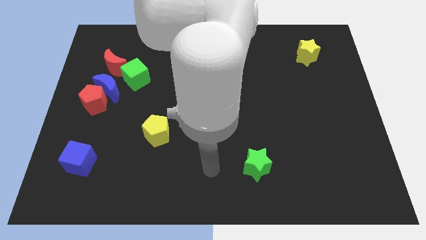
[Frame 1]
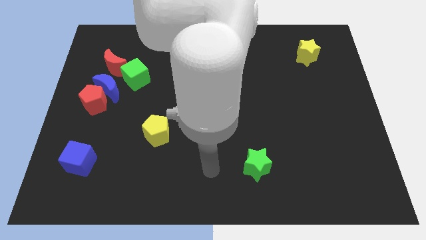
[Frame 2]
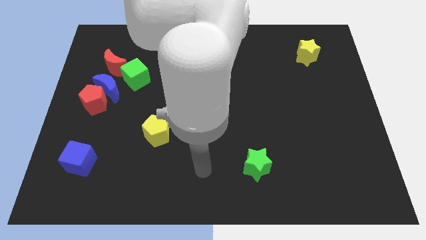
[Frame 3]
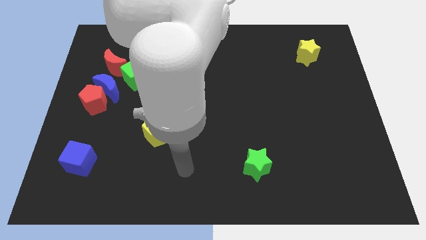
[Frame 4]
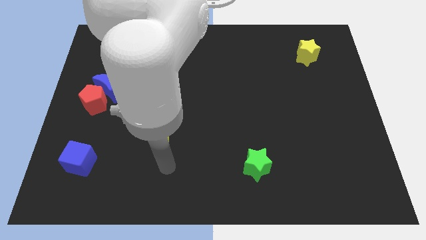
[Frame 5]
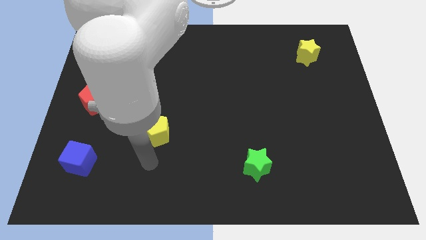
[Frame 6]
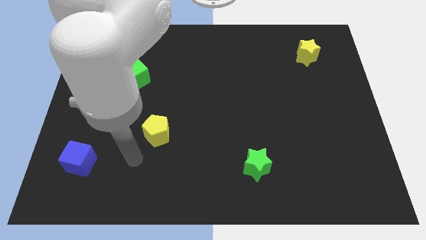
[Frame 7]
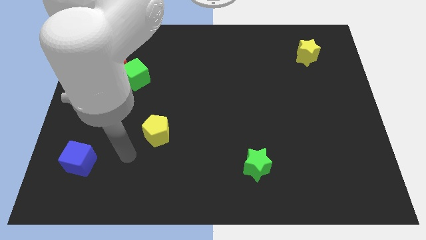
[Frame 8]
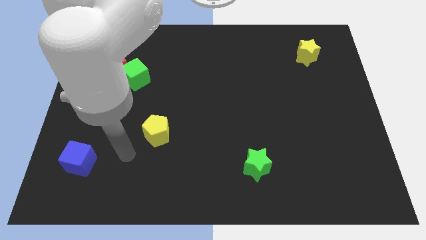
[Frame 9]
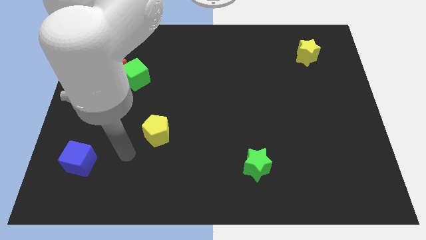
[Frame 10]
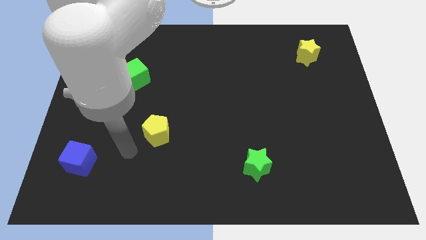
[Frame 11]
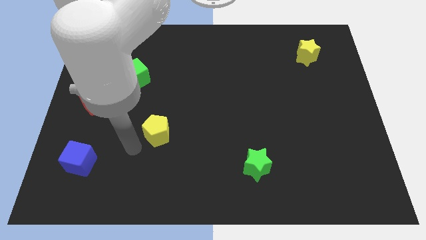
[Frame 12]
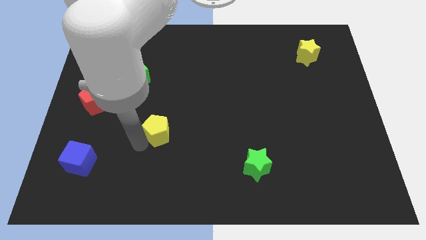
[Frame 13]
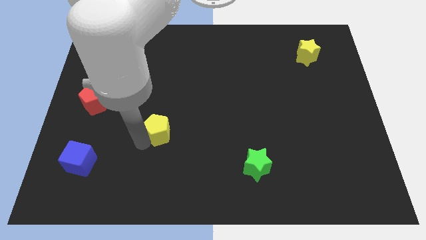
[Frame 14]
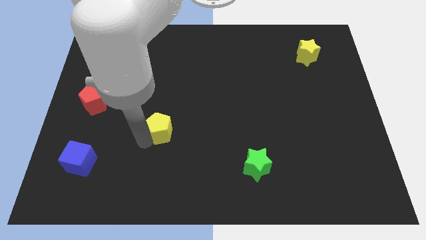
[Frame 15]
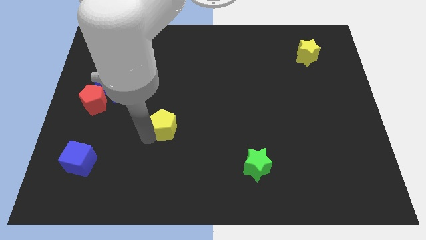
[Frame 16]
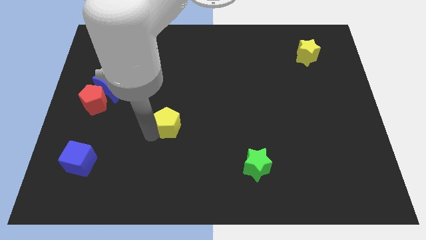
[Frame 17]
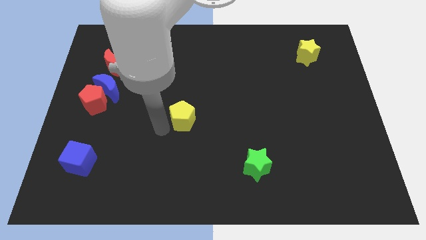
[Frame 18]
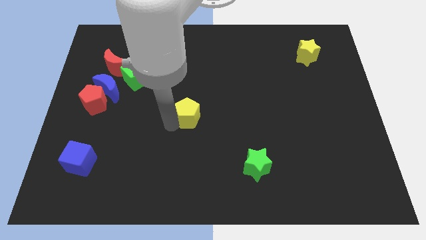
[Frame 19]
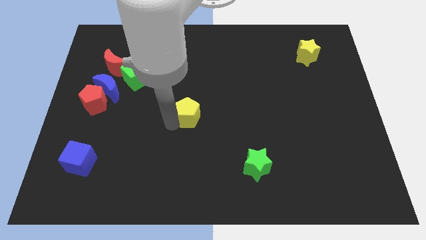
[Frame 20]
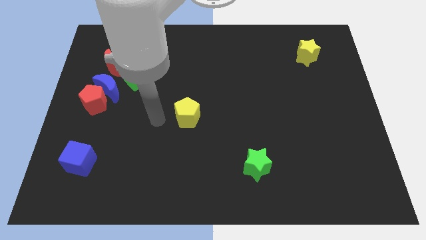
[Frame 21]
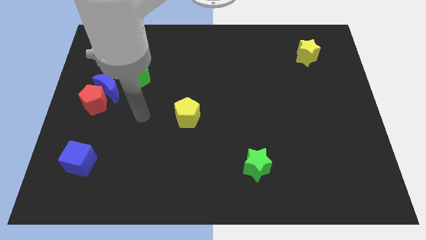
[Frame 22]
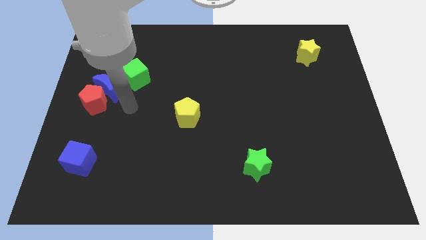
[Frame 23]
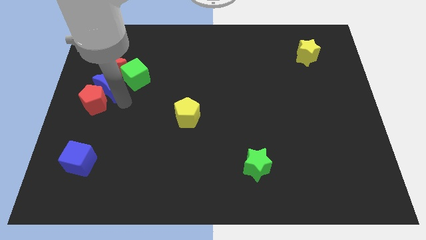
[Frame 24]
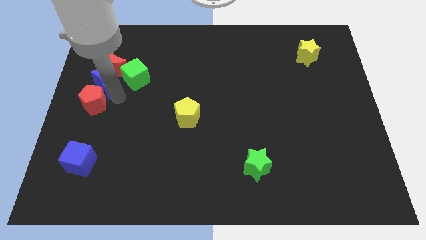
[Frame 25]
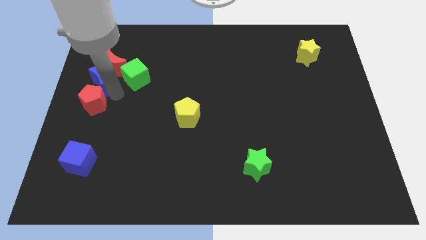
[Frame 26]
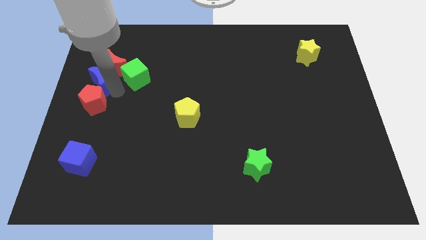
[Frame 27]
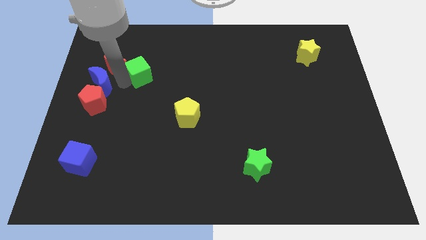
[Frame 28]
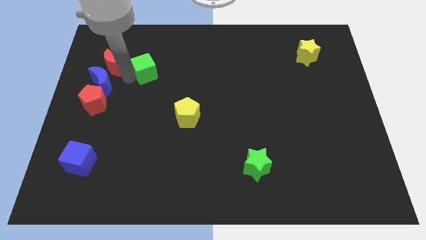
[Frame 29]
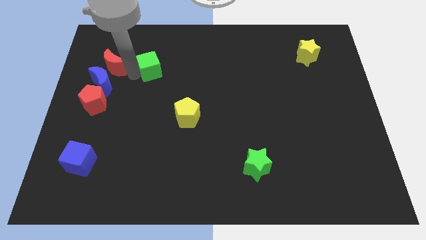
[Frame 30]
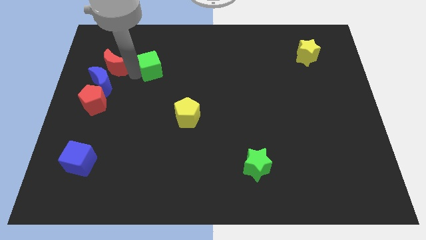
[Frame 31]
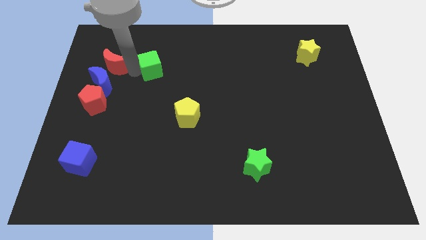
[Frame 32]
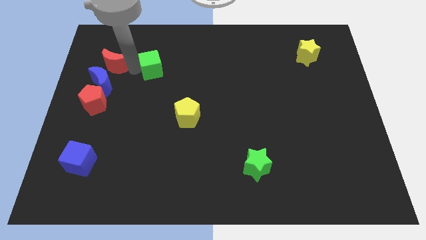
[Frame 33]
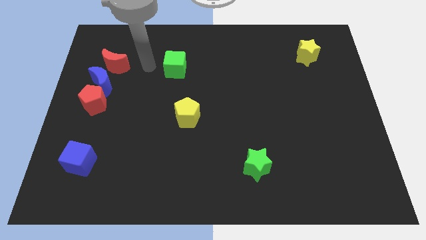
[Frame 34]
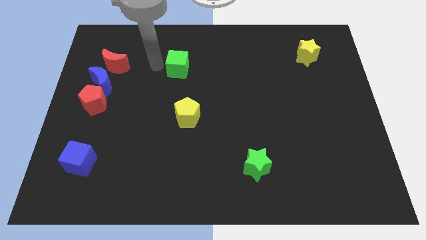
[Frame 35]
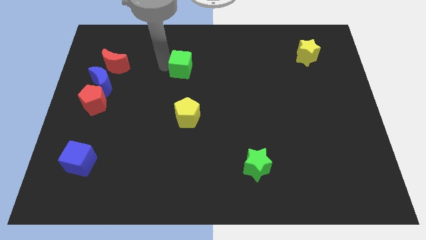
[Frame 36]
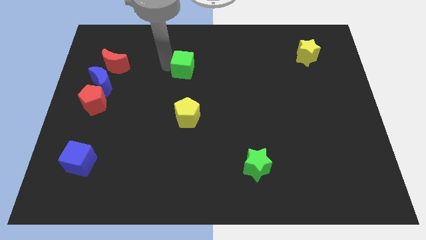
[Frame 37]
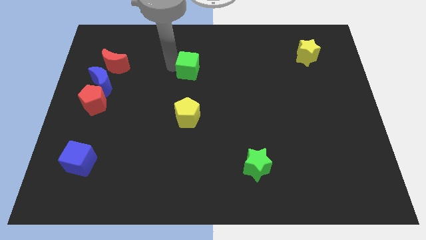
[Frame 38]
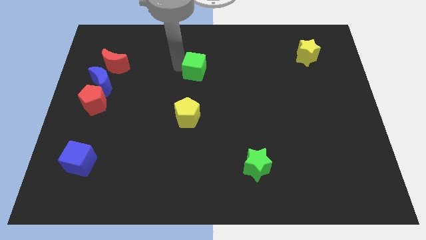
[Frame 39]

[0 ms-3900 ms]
place the yellow pentagon and green cube in a vertical line at the center of the board

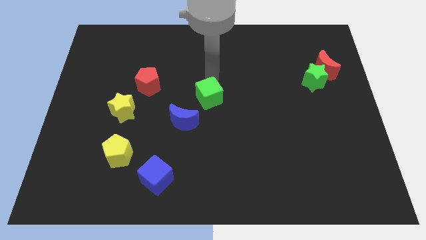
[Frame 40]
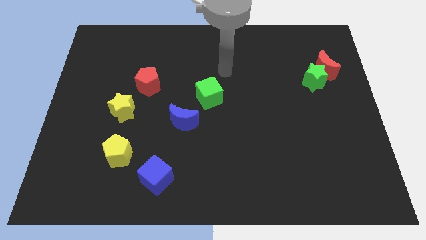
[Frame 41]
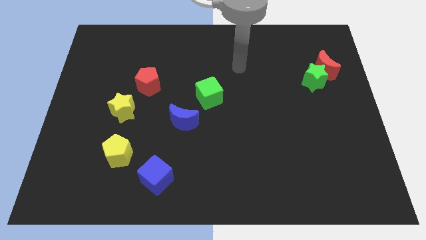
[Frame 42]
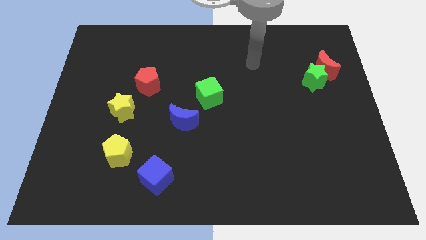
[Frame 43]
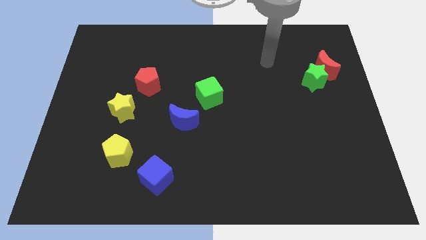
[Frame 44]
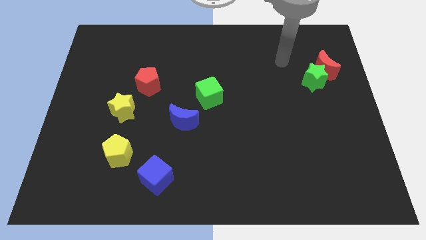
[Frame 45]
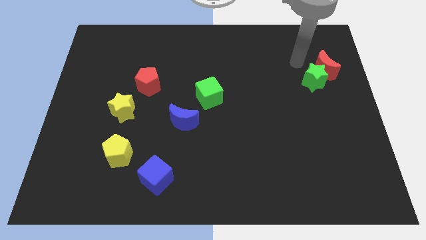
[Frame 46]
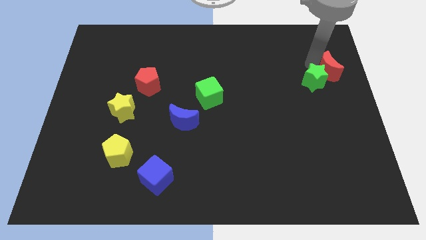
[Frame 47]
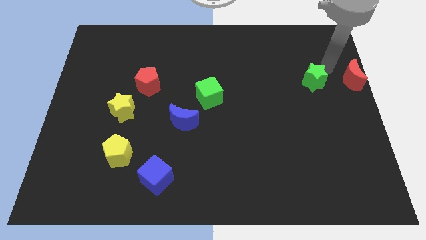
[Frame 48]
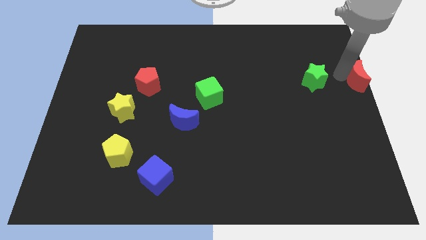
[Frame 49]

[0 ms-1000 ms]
move red moon to the right end of the board

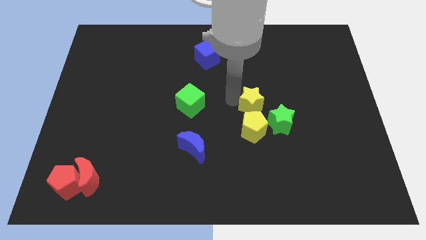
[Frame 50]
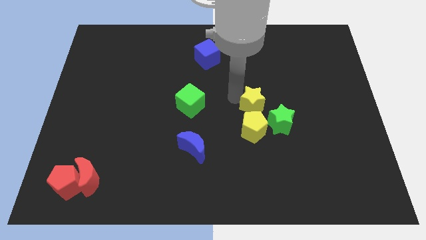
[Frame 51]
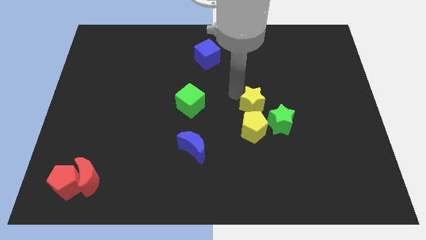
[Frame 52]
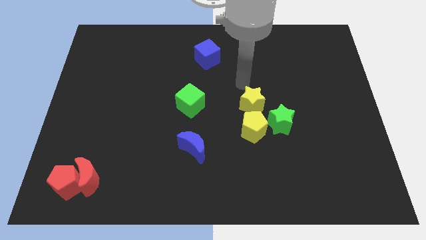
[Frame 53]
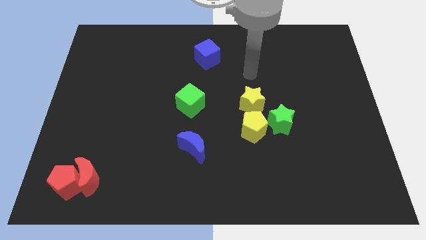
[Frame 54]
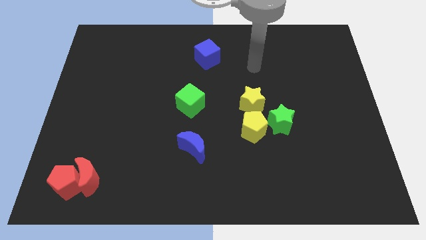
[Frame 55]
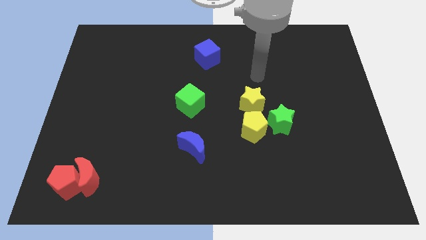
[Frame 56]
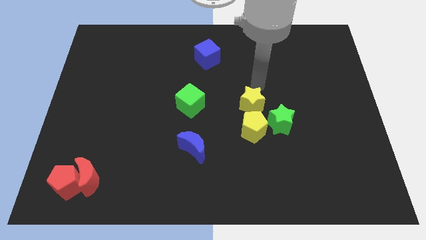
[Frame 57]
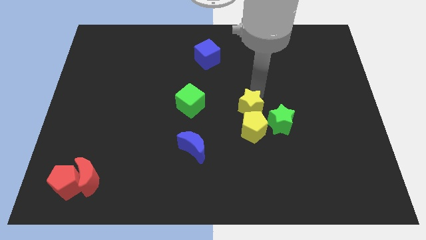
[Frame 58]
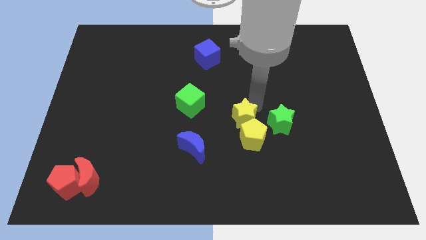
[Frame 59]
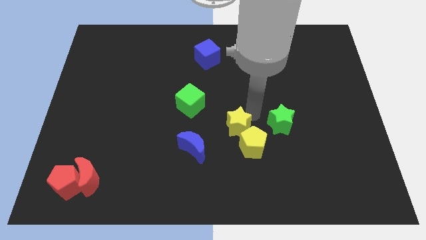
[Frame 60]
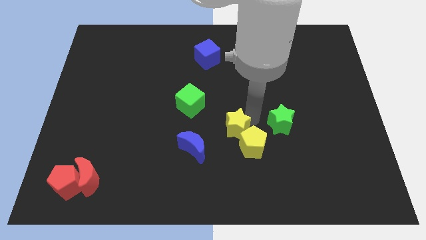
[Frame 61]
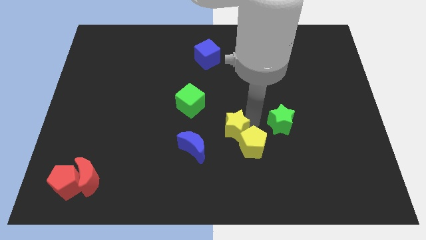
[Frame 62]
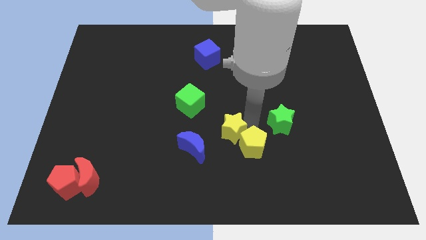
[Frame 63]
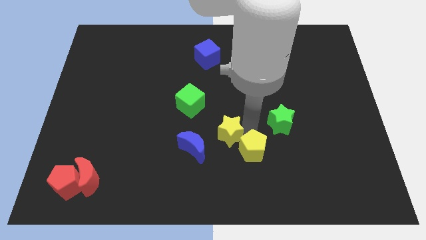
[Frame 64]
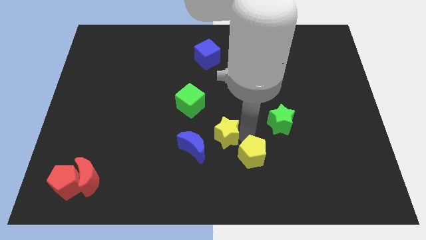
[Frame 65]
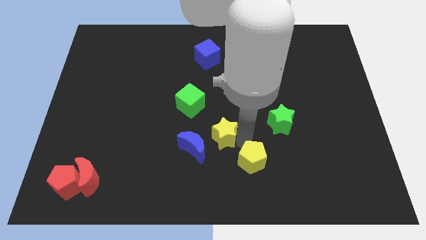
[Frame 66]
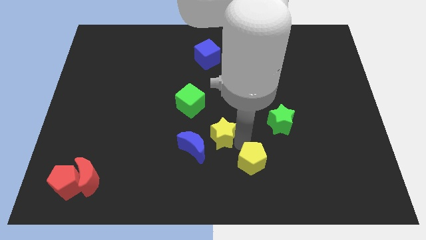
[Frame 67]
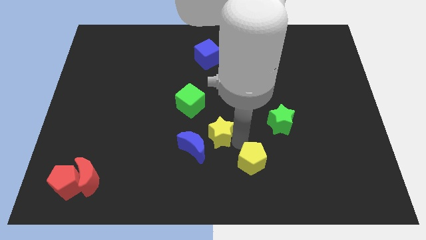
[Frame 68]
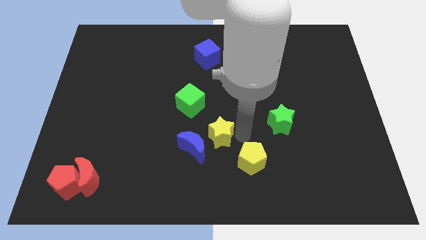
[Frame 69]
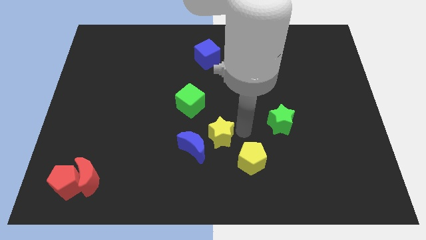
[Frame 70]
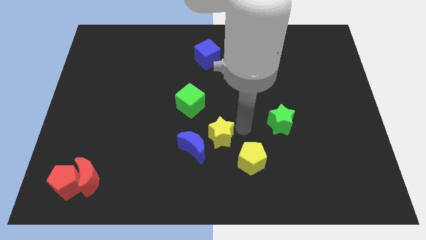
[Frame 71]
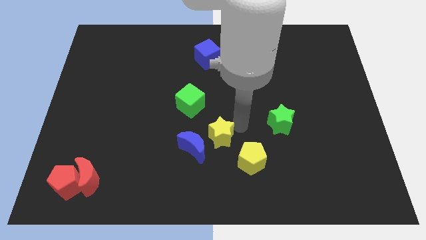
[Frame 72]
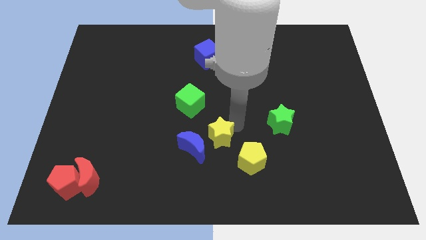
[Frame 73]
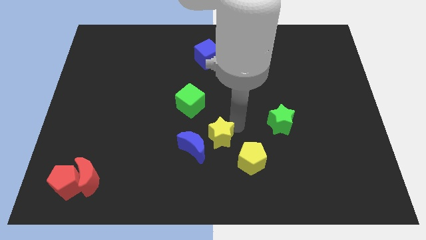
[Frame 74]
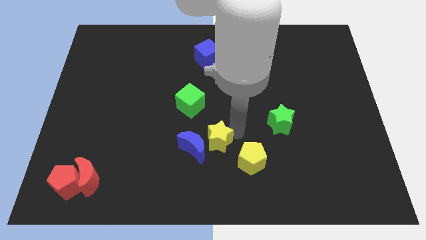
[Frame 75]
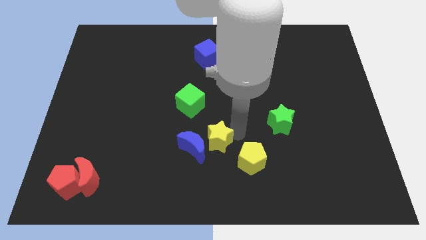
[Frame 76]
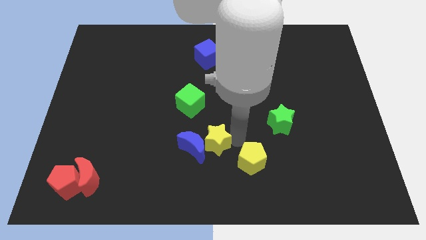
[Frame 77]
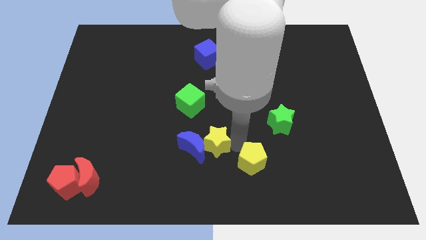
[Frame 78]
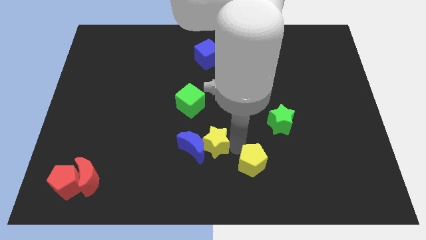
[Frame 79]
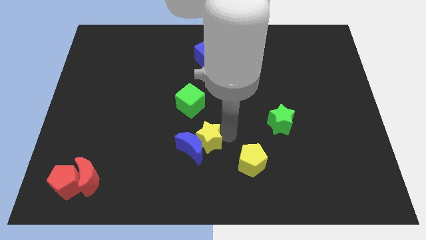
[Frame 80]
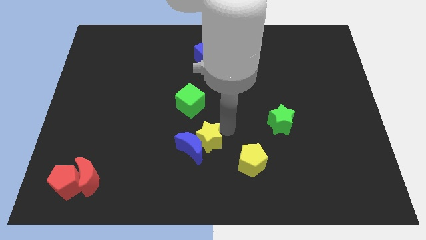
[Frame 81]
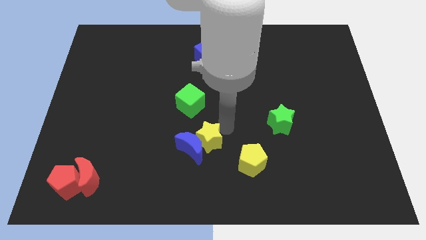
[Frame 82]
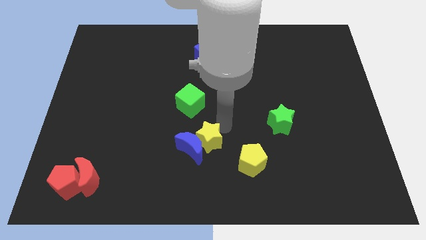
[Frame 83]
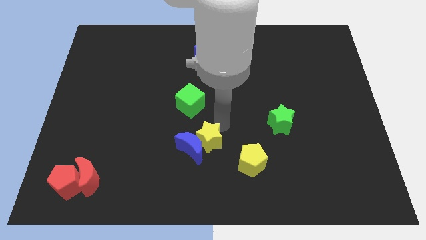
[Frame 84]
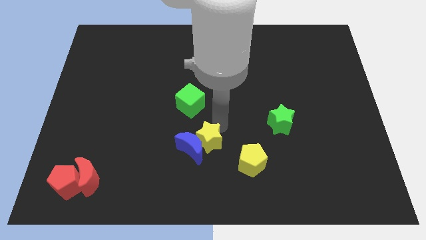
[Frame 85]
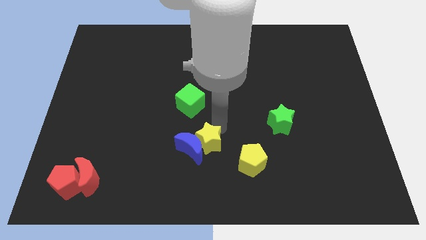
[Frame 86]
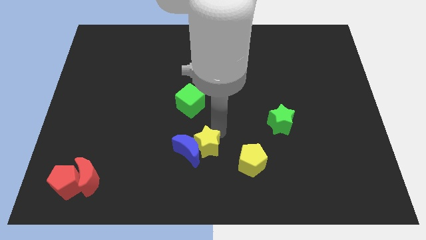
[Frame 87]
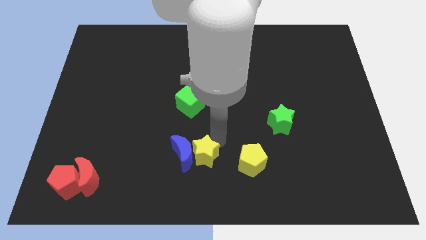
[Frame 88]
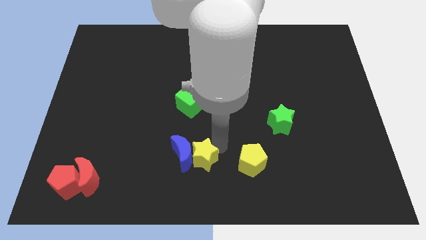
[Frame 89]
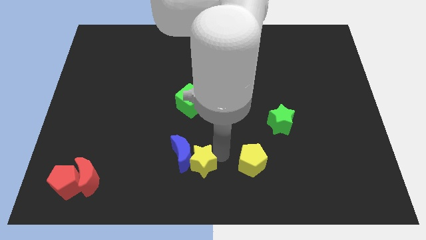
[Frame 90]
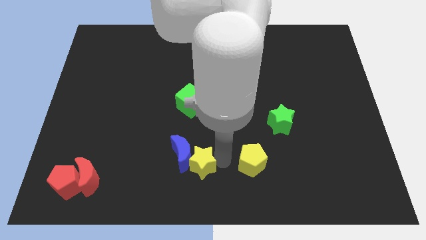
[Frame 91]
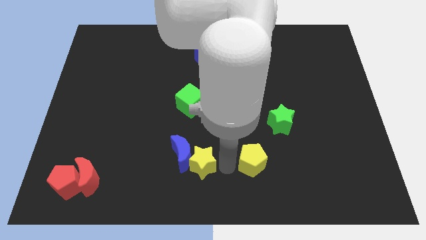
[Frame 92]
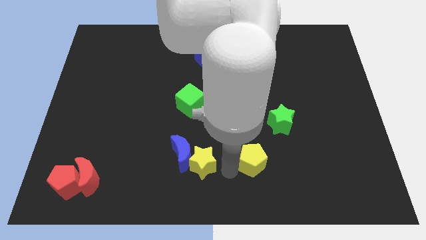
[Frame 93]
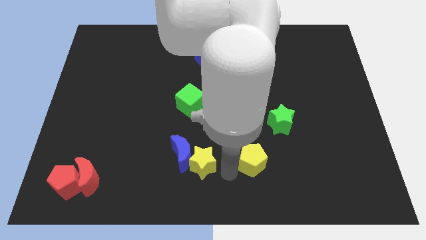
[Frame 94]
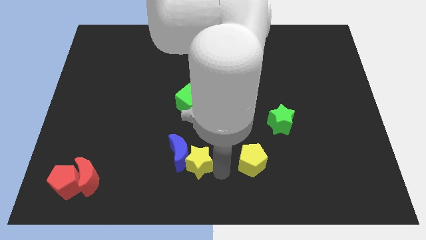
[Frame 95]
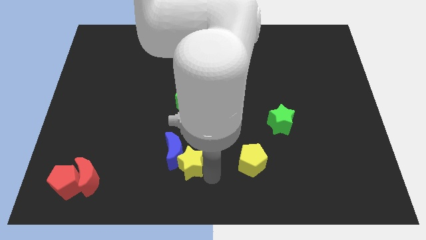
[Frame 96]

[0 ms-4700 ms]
separate the yellow blocks
